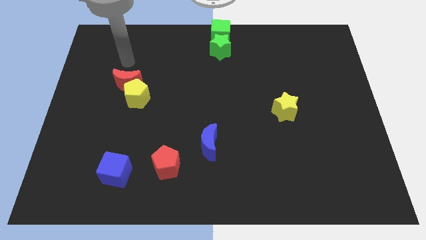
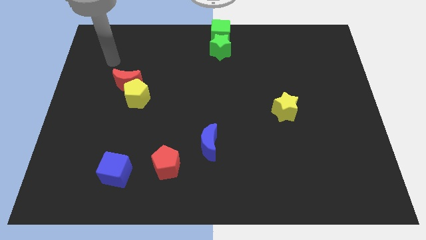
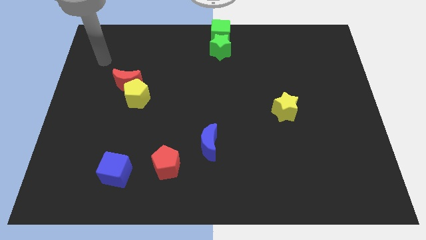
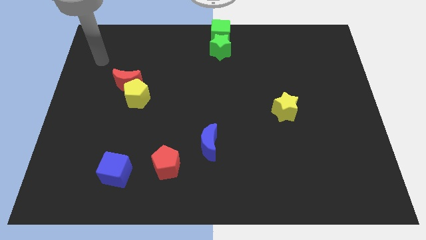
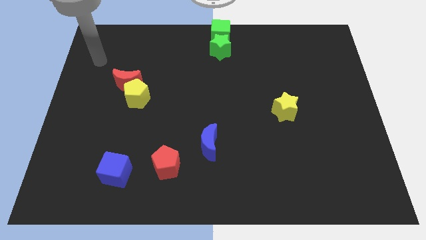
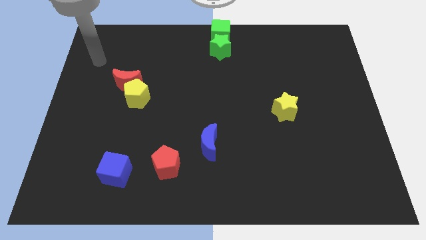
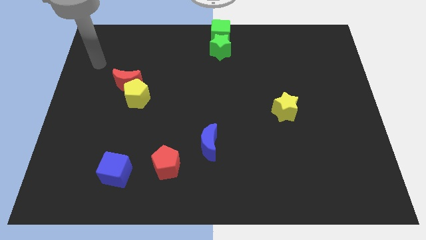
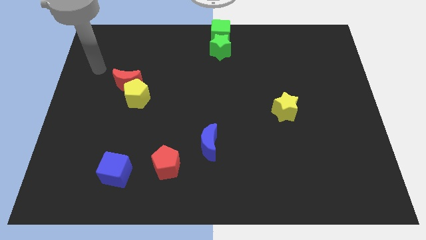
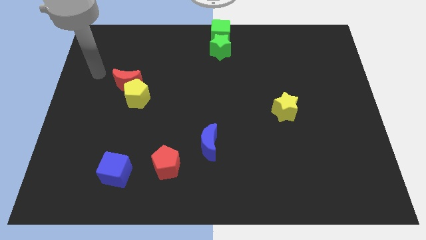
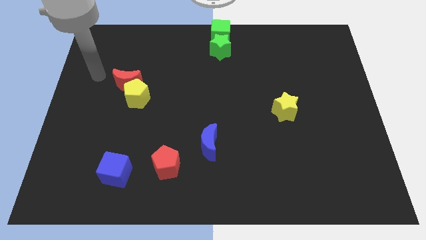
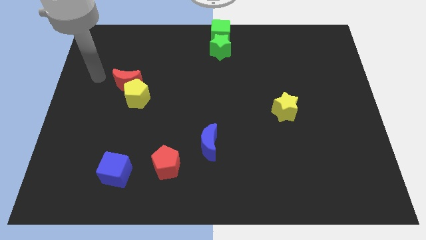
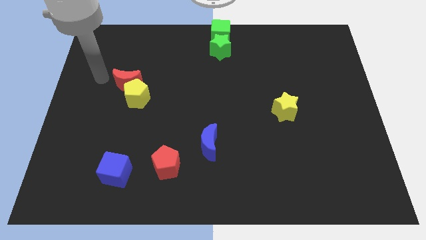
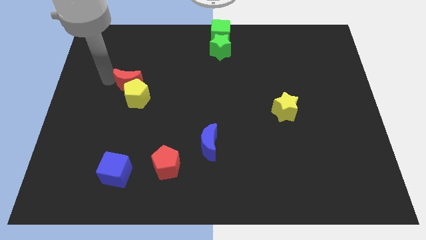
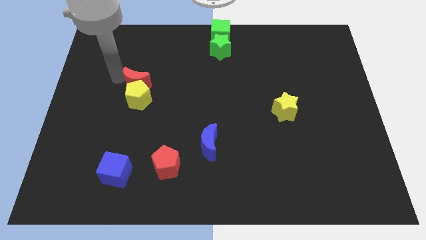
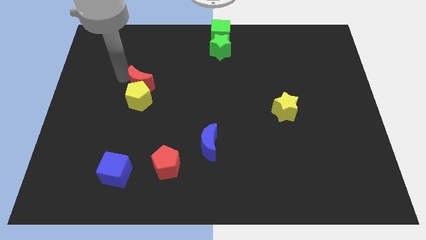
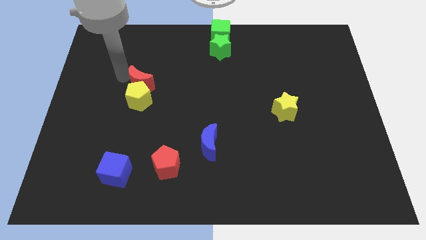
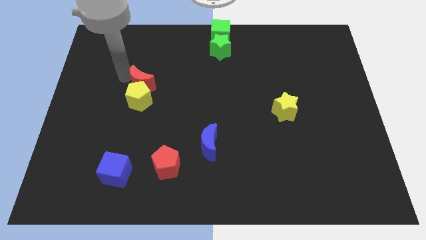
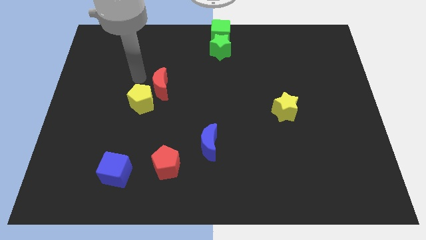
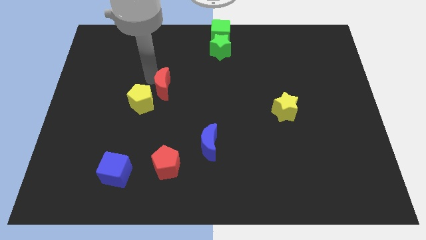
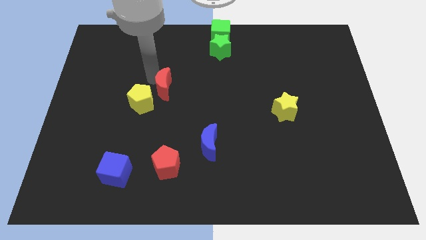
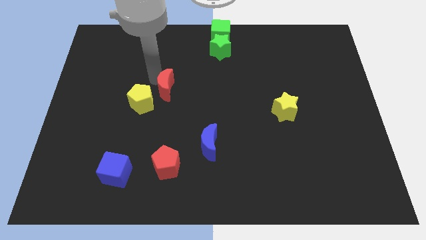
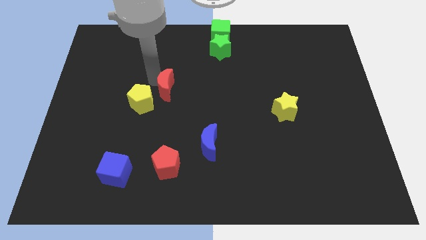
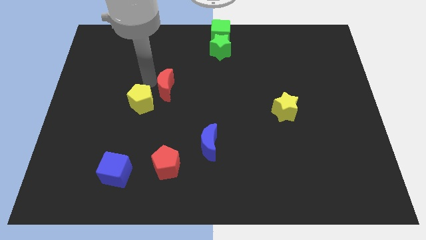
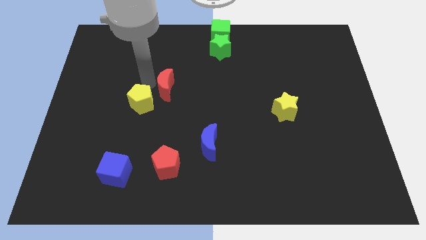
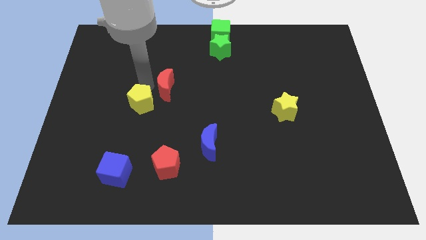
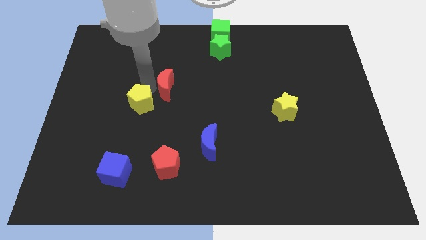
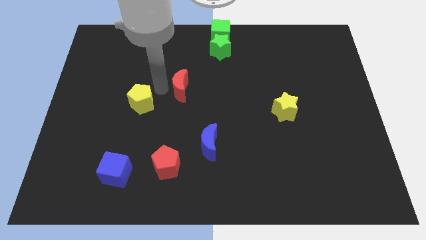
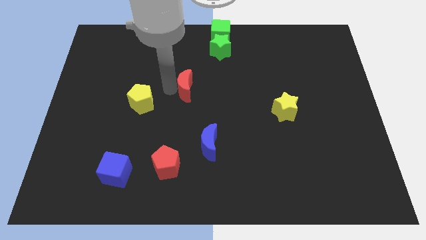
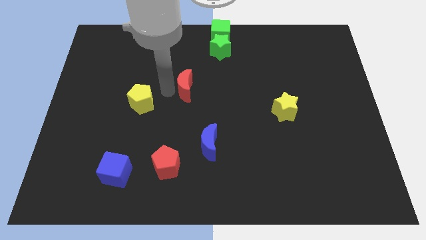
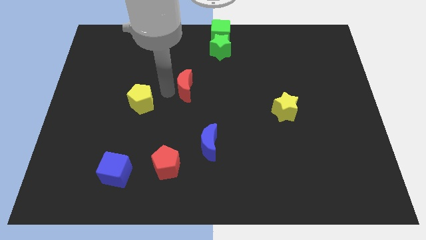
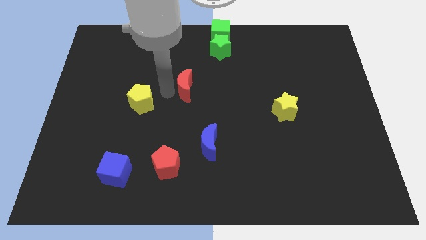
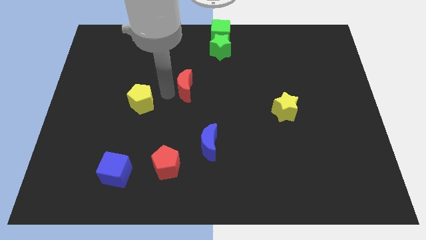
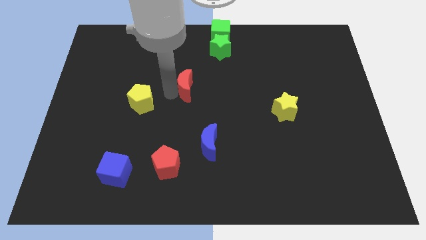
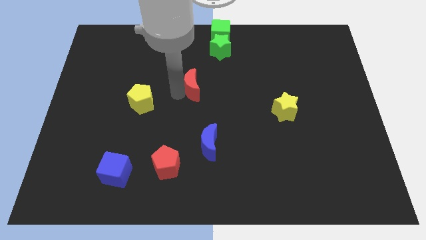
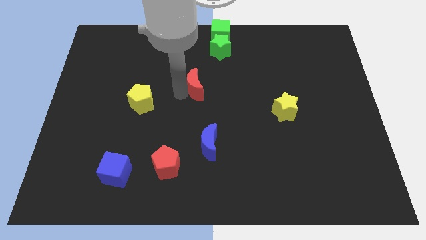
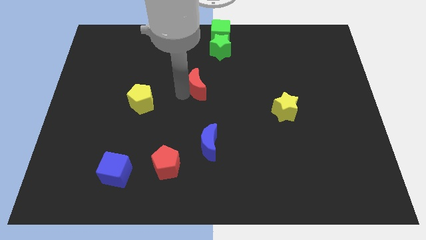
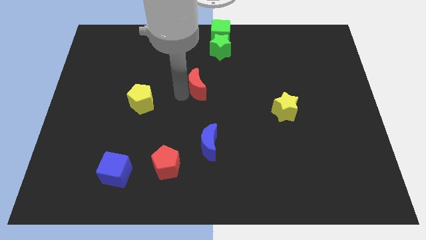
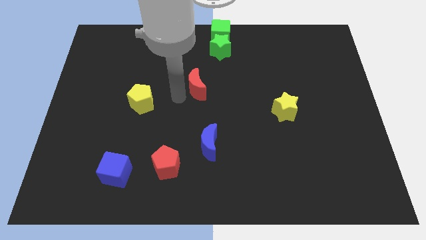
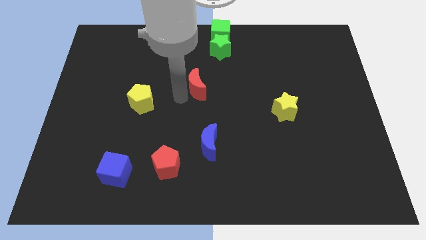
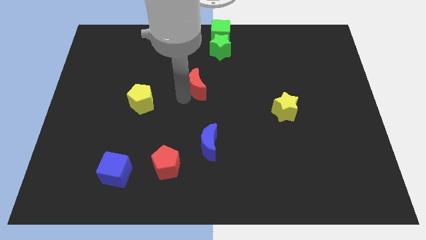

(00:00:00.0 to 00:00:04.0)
separate red moon from the yellow pentagon

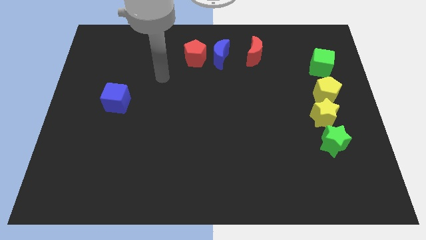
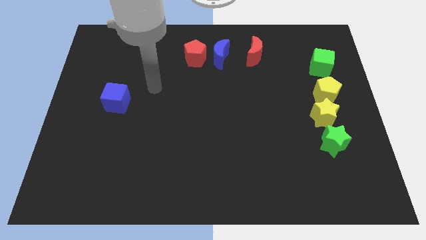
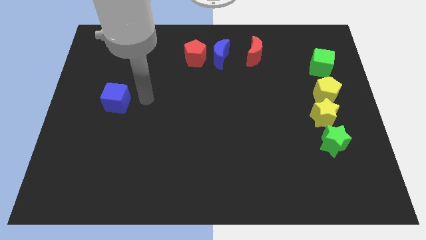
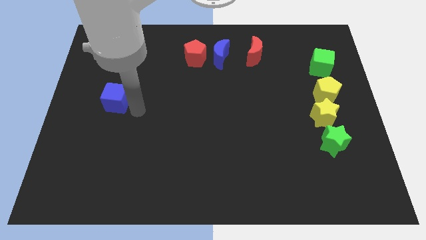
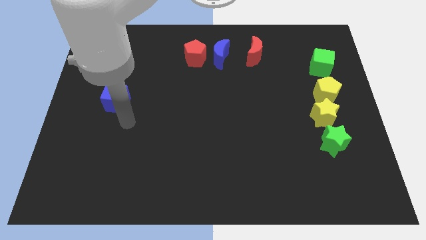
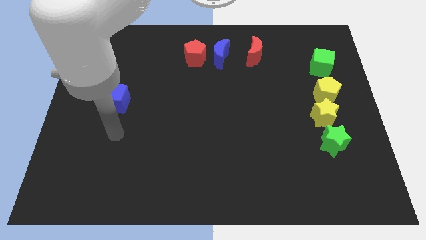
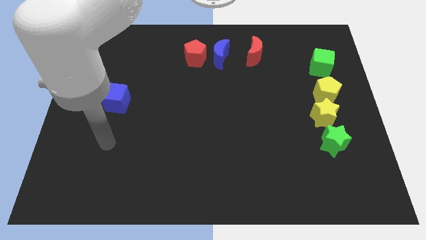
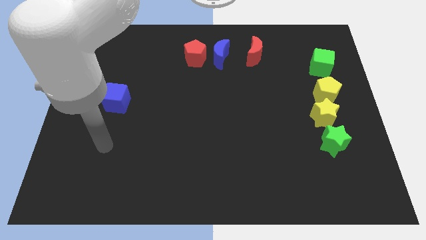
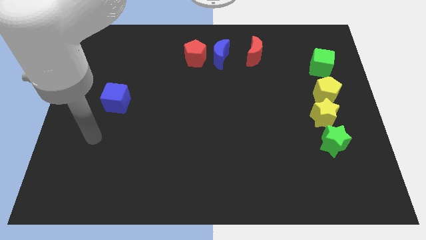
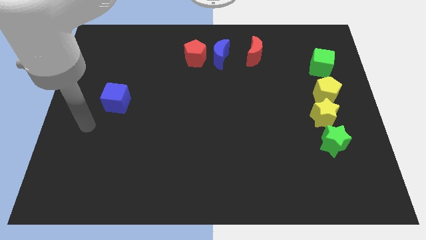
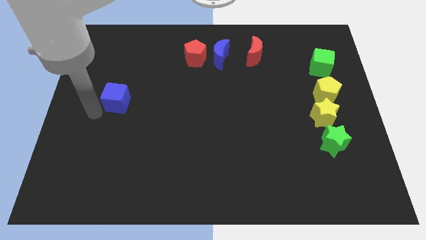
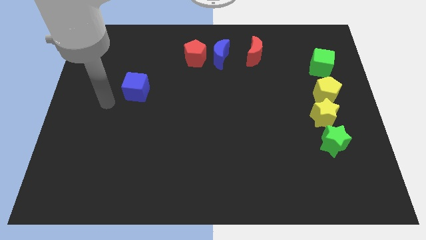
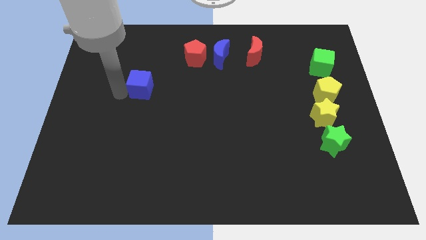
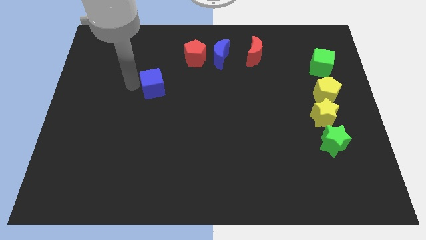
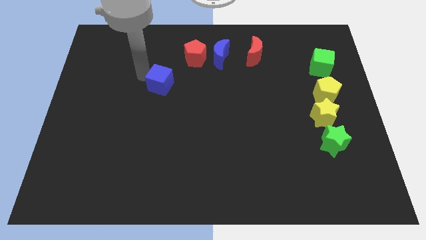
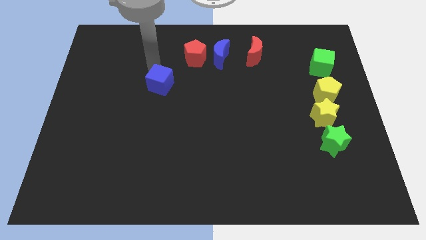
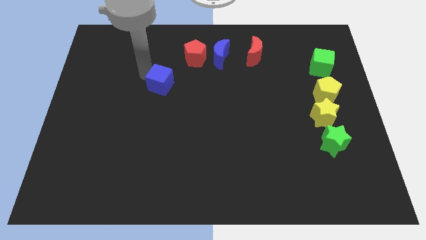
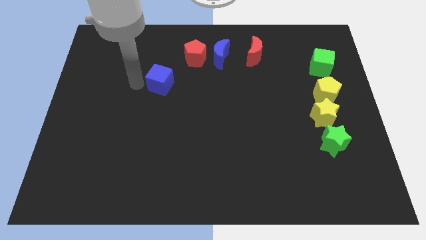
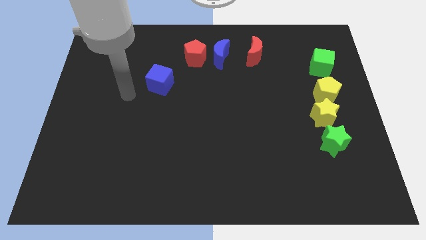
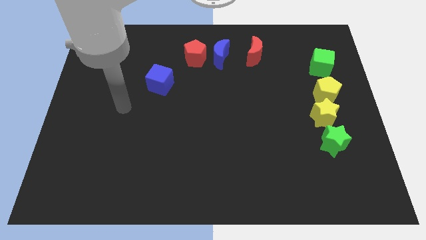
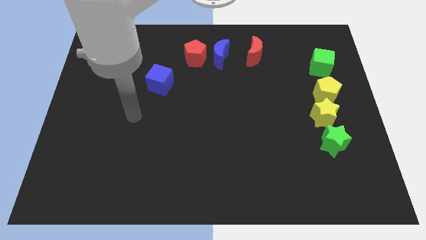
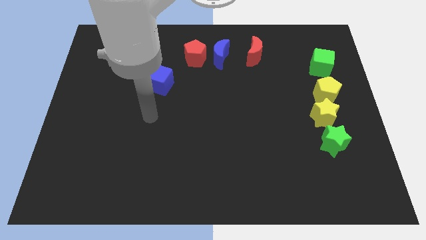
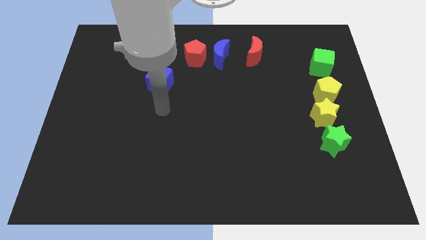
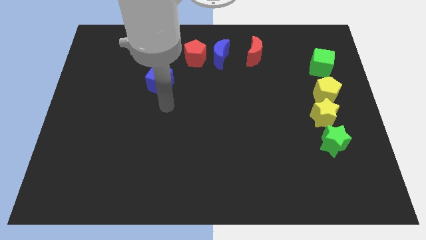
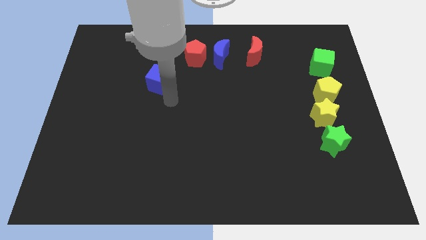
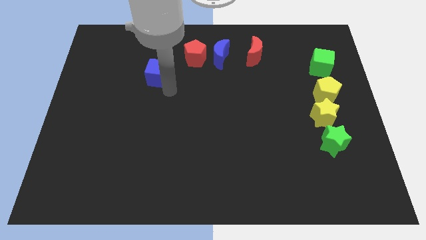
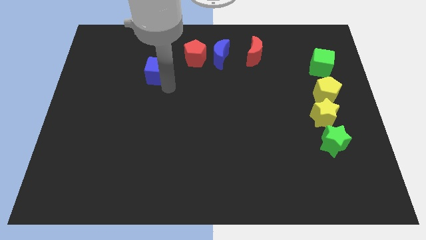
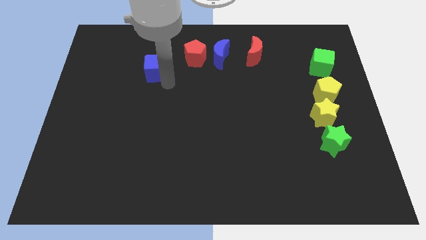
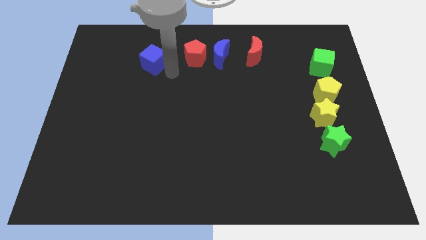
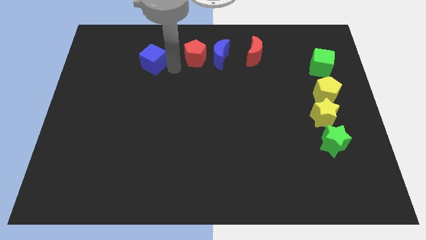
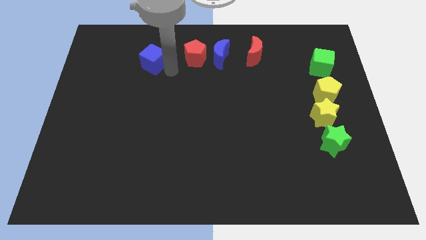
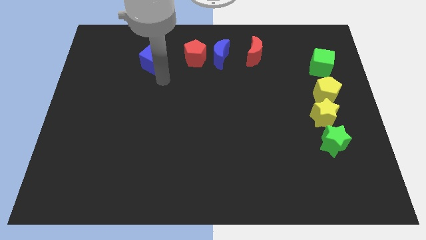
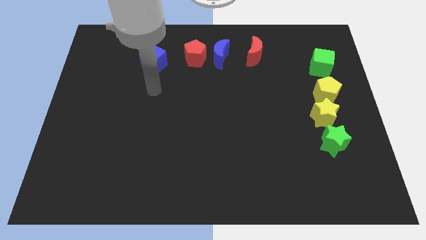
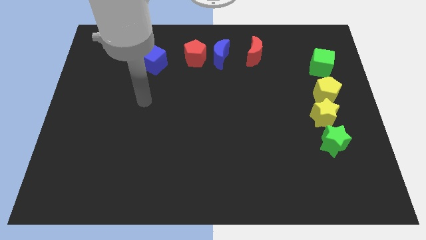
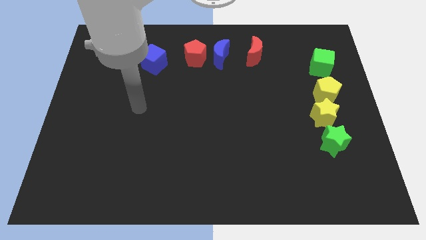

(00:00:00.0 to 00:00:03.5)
put the blue cube horizontally to the left of the red pentagon

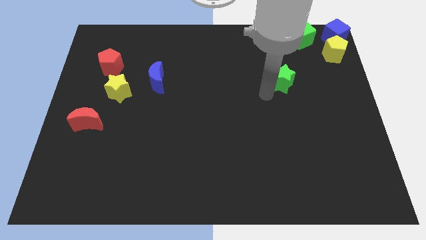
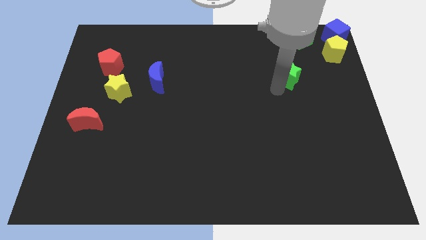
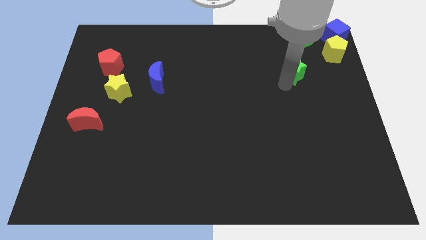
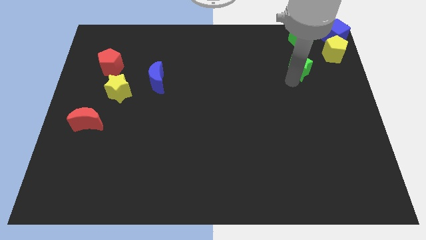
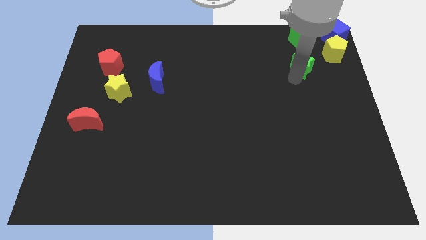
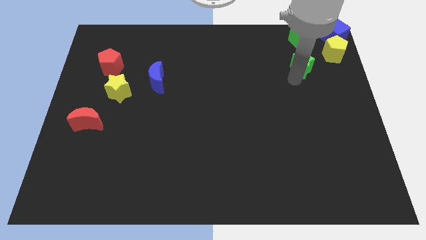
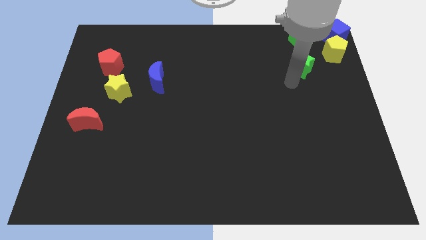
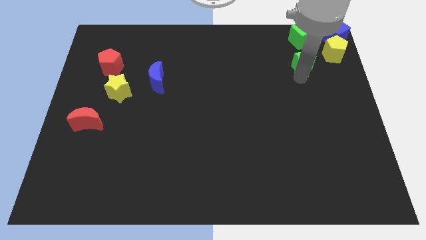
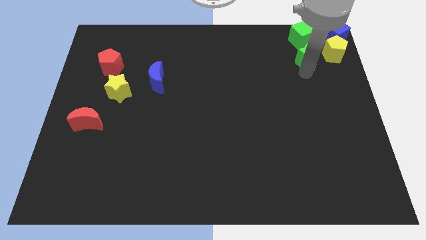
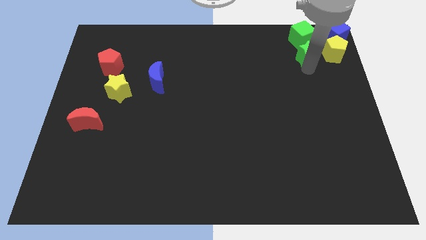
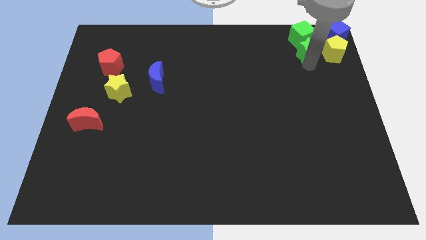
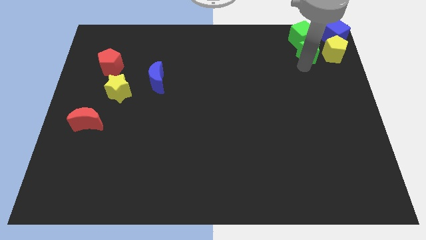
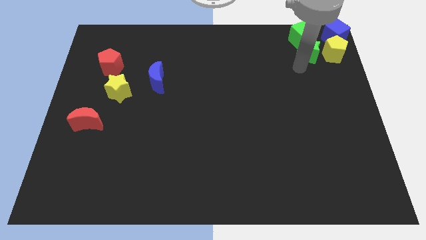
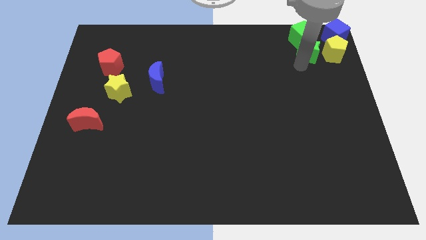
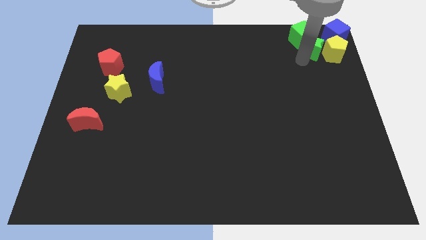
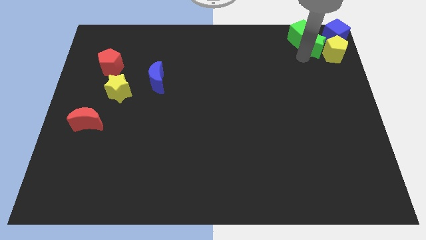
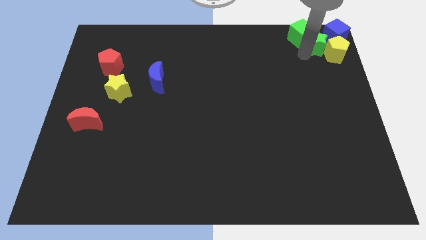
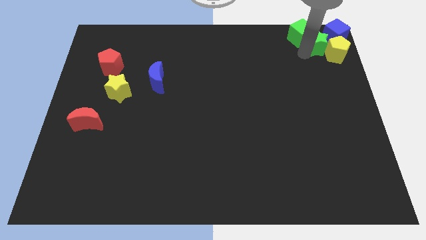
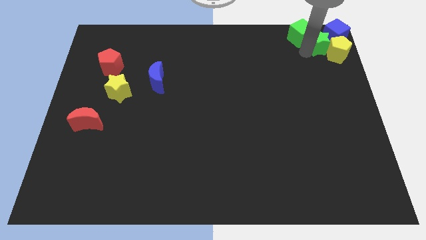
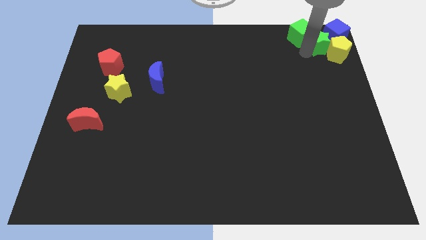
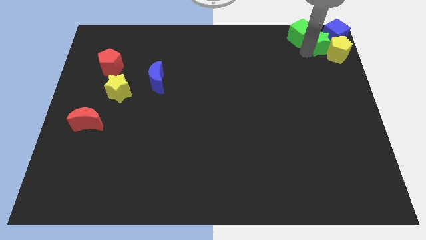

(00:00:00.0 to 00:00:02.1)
move the green star between the yellow pentagon and green cube
